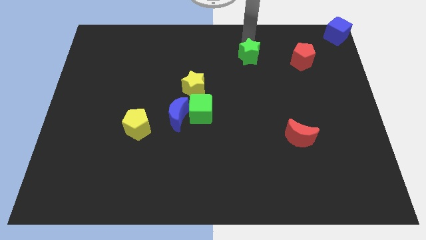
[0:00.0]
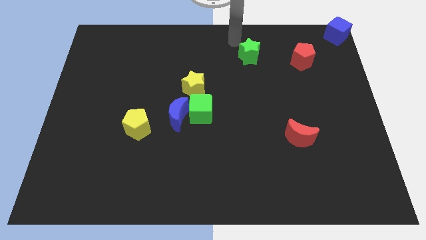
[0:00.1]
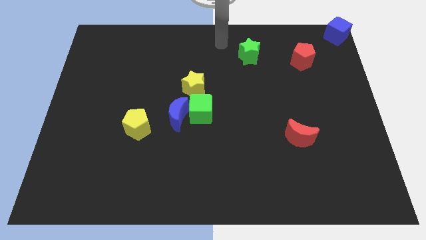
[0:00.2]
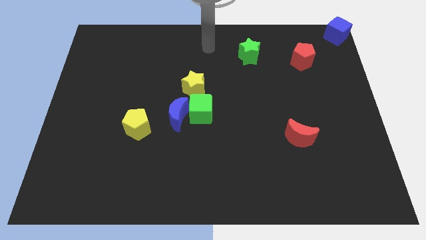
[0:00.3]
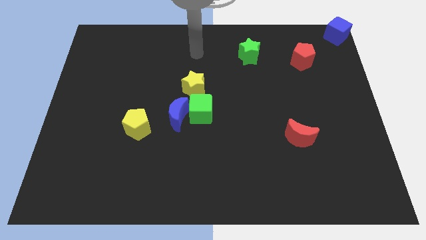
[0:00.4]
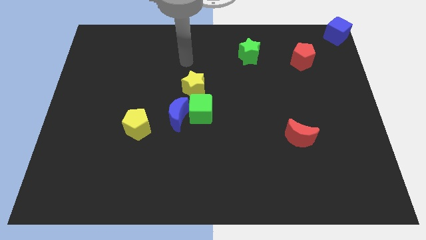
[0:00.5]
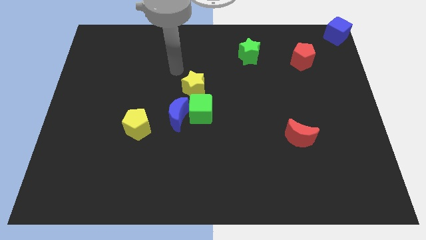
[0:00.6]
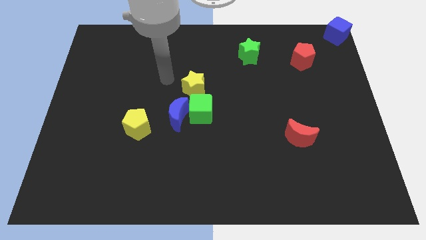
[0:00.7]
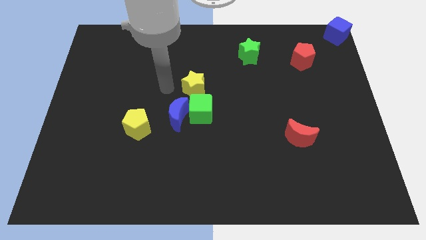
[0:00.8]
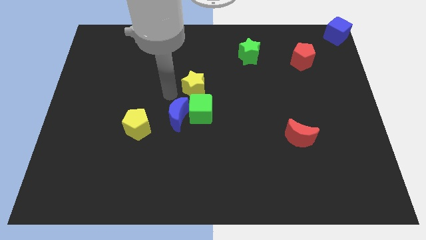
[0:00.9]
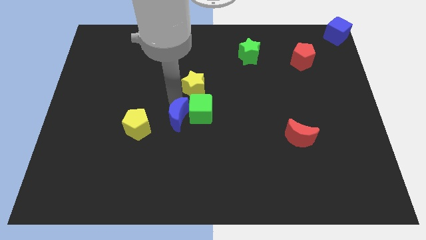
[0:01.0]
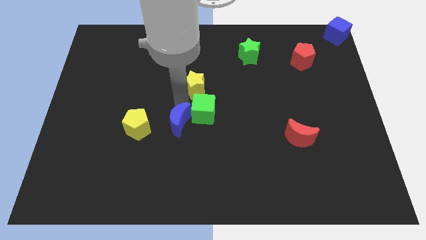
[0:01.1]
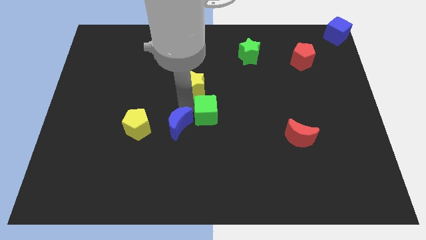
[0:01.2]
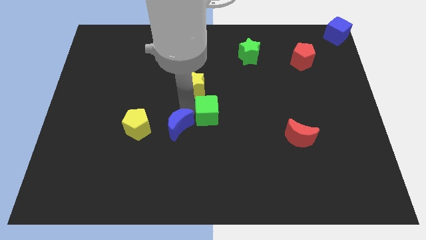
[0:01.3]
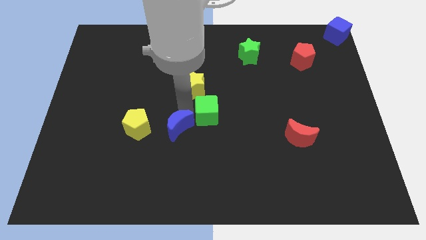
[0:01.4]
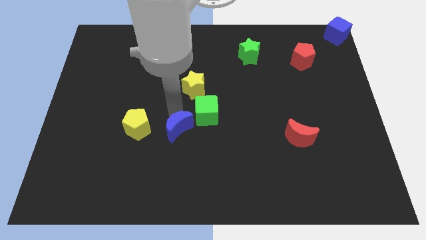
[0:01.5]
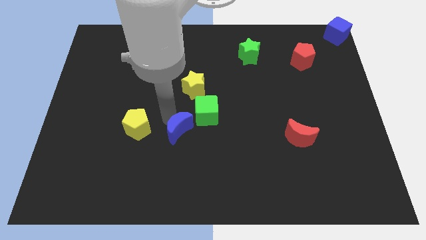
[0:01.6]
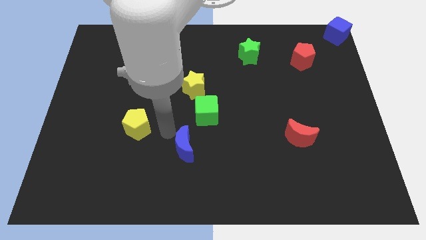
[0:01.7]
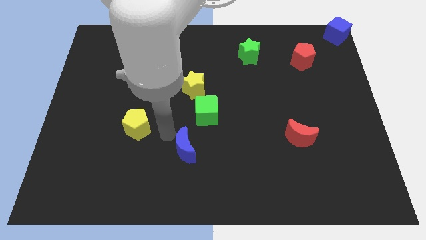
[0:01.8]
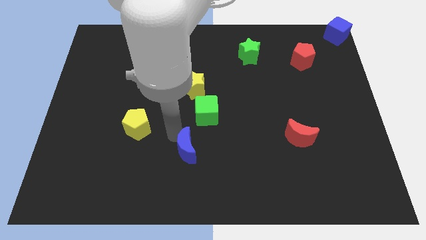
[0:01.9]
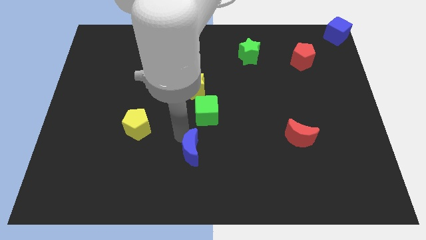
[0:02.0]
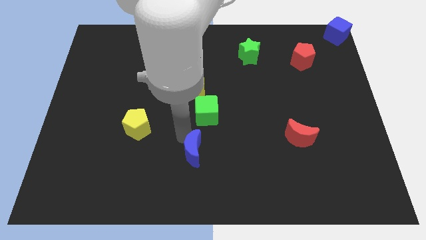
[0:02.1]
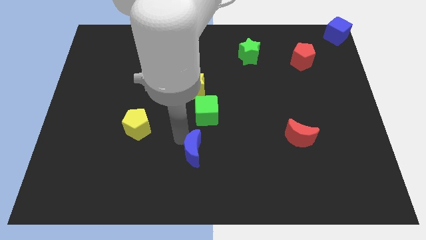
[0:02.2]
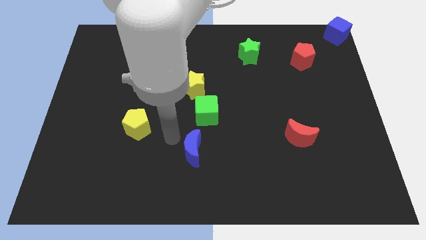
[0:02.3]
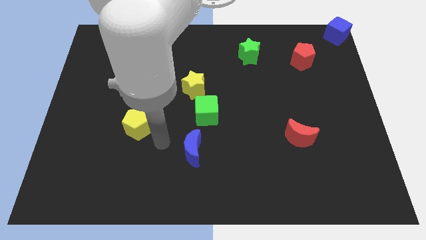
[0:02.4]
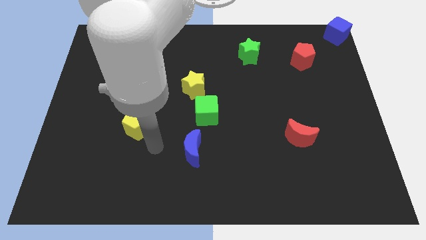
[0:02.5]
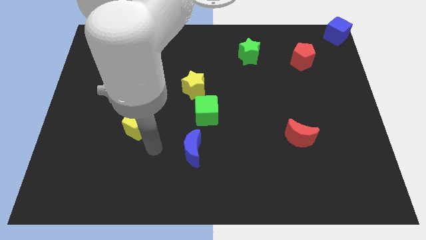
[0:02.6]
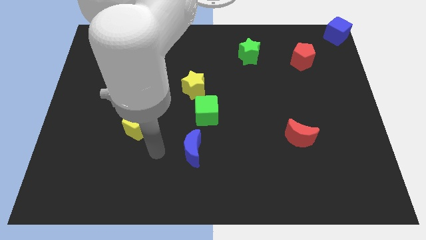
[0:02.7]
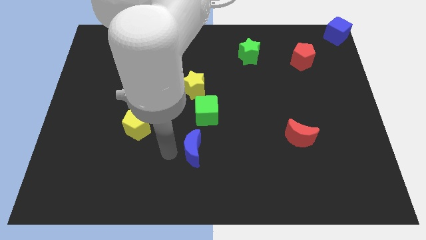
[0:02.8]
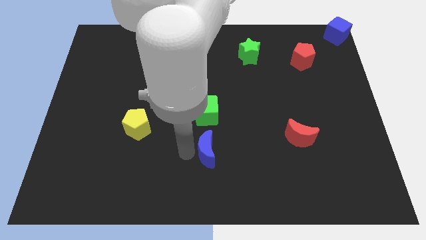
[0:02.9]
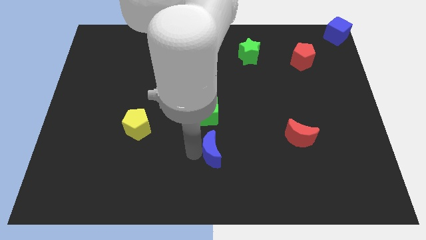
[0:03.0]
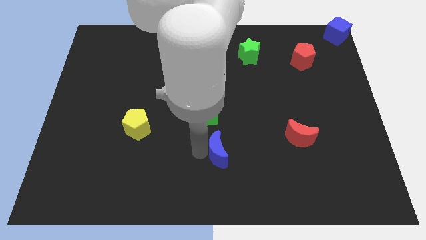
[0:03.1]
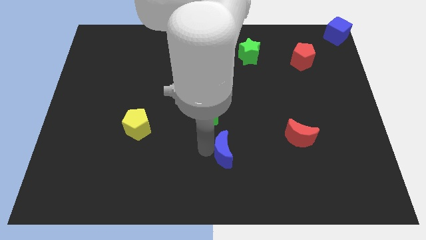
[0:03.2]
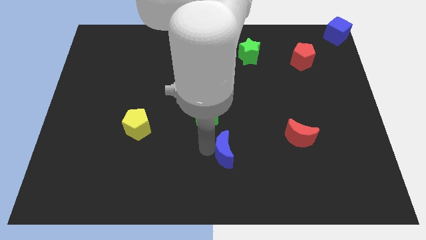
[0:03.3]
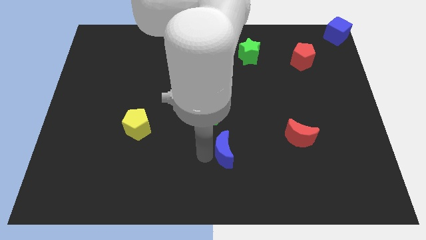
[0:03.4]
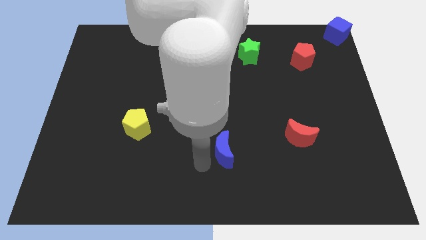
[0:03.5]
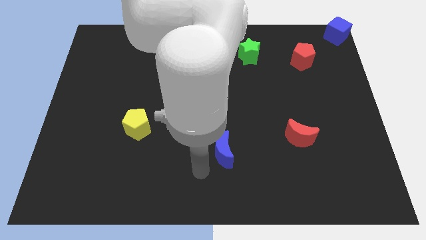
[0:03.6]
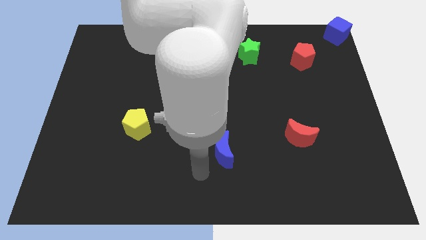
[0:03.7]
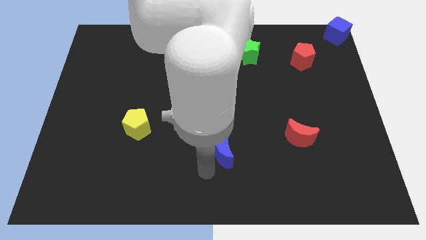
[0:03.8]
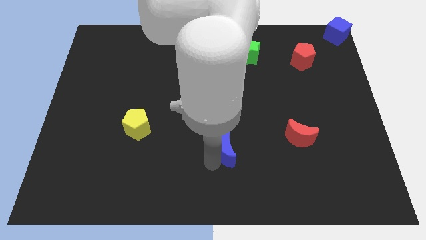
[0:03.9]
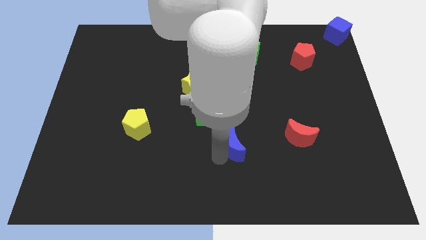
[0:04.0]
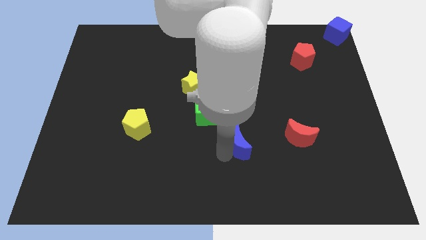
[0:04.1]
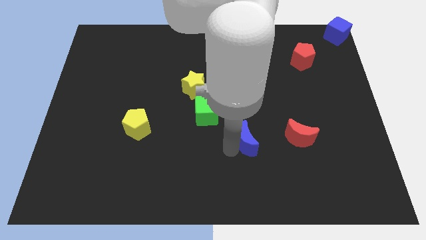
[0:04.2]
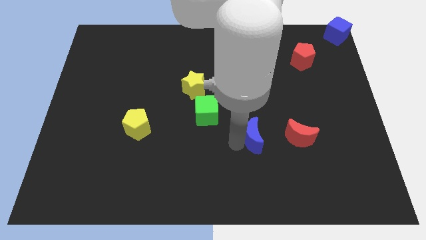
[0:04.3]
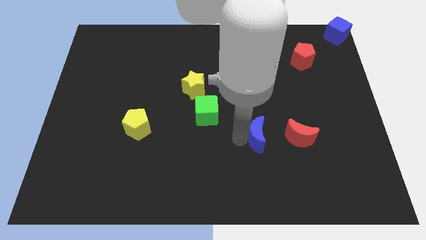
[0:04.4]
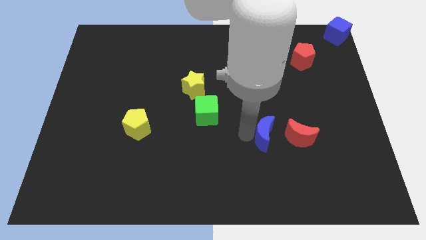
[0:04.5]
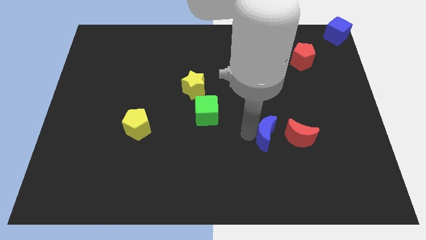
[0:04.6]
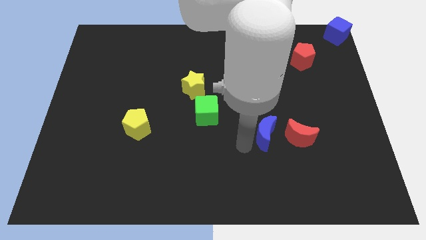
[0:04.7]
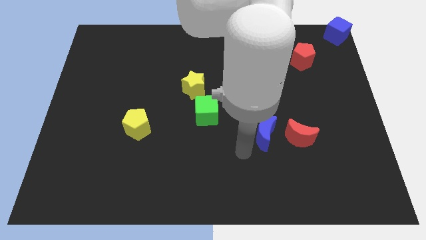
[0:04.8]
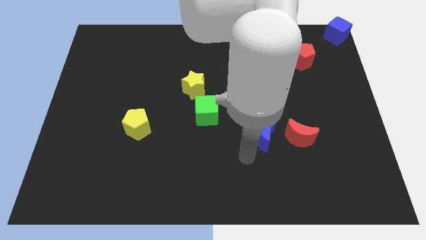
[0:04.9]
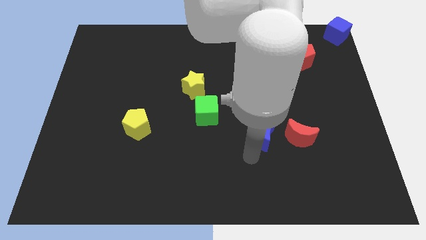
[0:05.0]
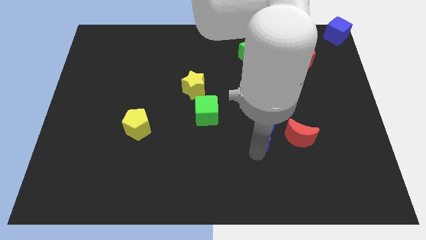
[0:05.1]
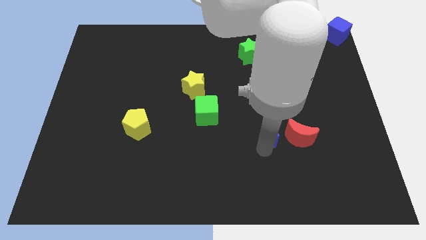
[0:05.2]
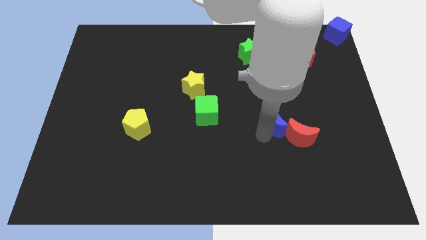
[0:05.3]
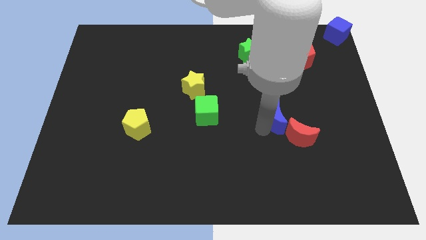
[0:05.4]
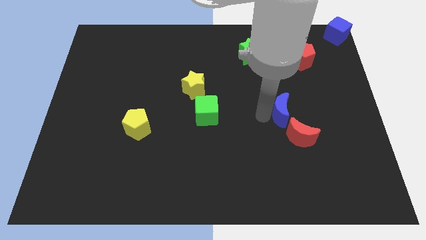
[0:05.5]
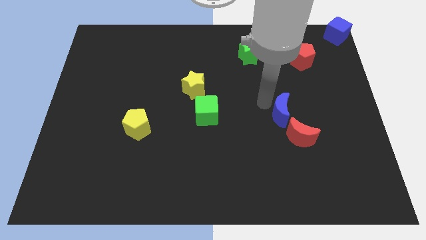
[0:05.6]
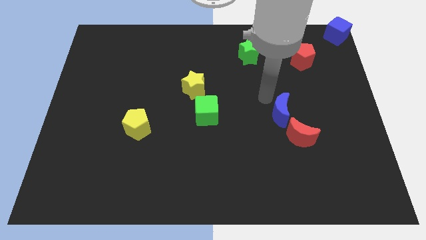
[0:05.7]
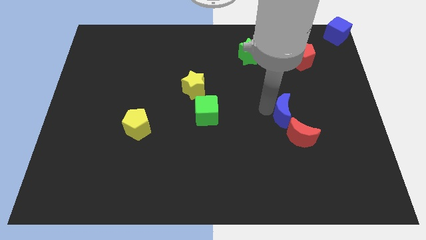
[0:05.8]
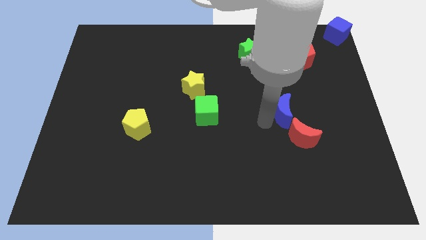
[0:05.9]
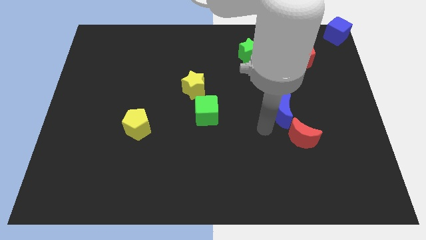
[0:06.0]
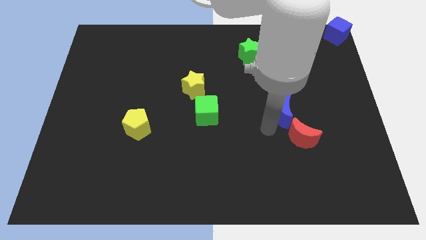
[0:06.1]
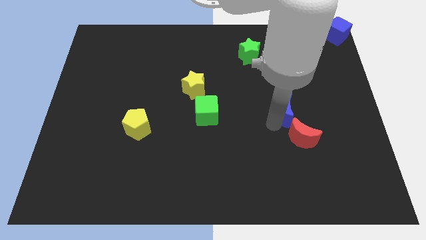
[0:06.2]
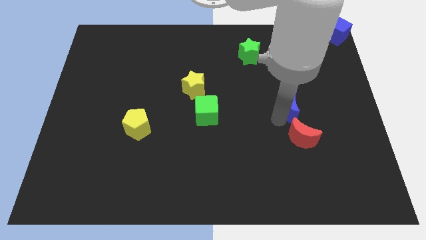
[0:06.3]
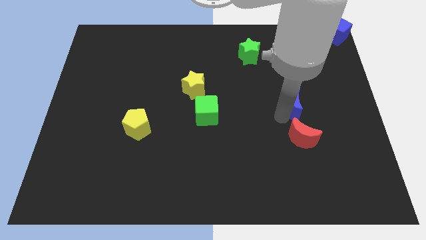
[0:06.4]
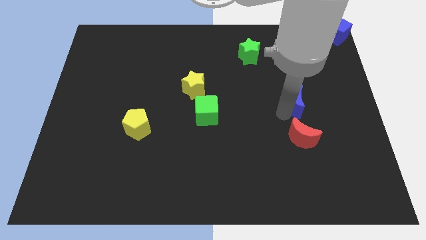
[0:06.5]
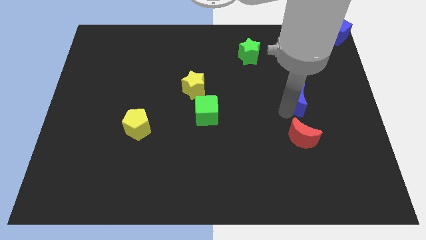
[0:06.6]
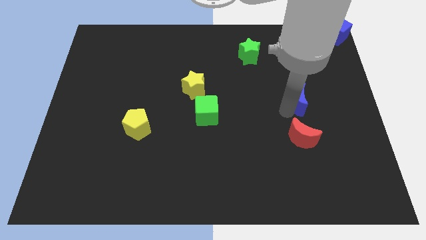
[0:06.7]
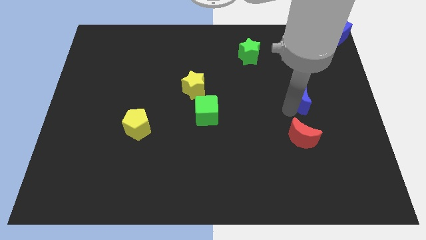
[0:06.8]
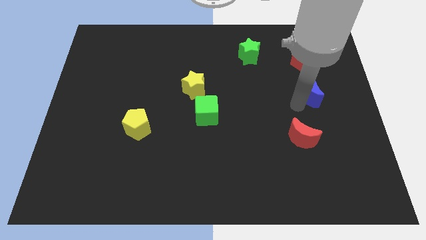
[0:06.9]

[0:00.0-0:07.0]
push the blue crescent below the red pentagon

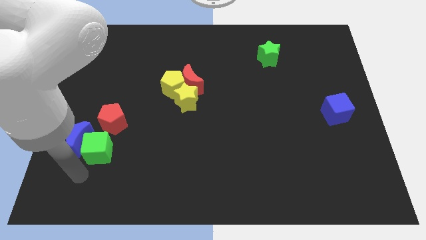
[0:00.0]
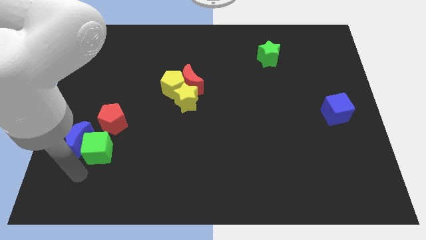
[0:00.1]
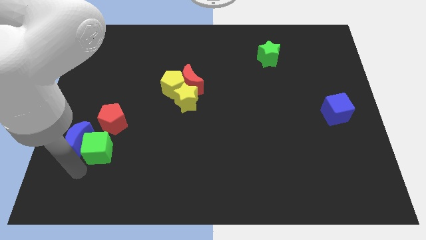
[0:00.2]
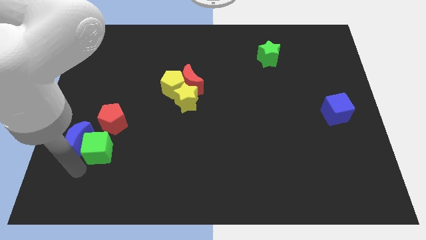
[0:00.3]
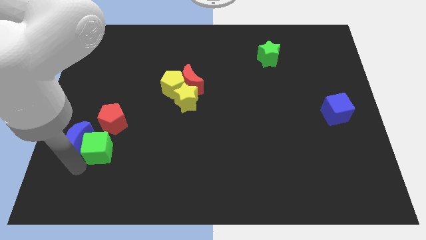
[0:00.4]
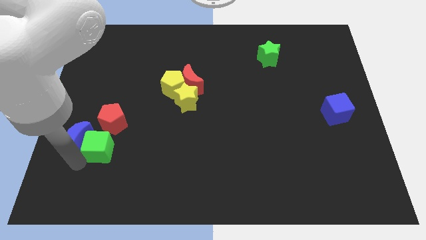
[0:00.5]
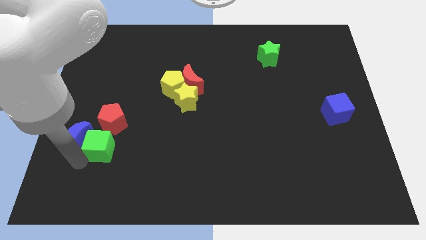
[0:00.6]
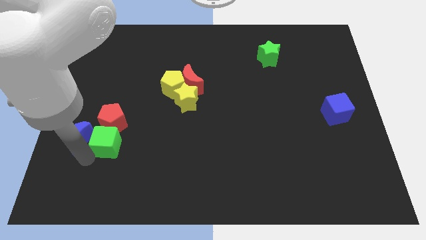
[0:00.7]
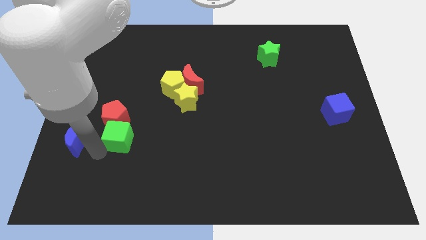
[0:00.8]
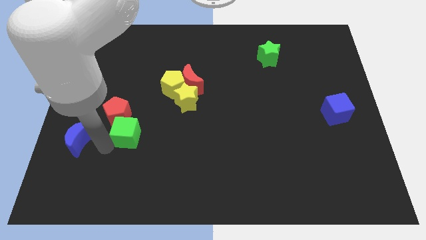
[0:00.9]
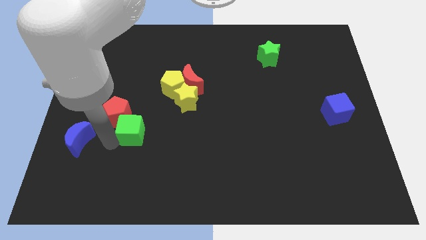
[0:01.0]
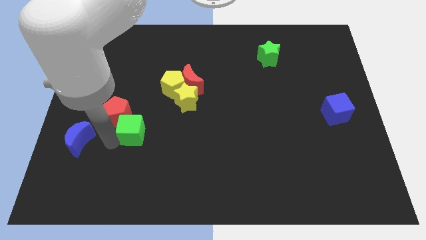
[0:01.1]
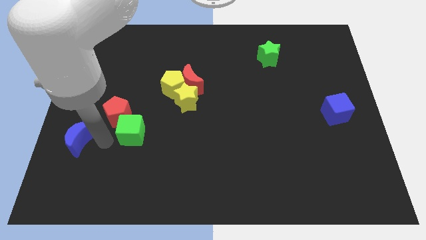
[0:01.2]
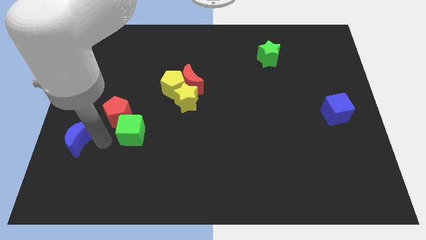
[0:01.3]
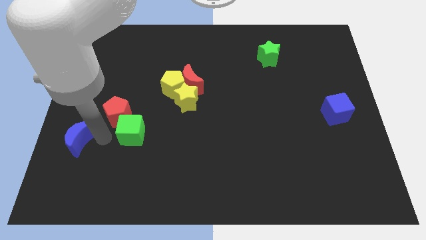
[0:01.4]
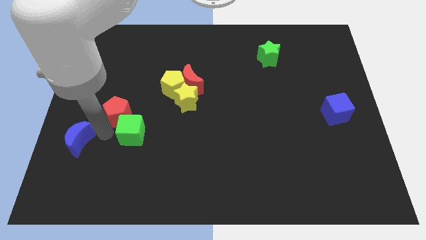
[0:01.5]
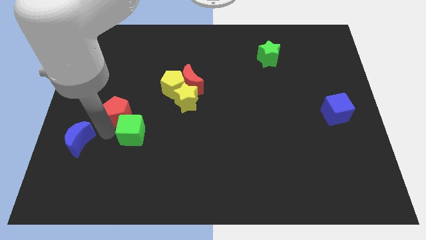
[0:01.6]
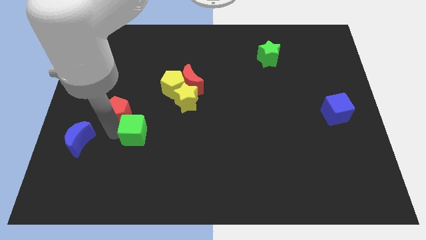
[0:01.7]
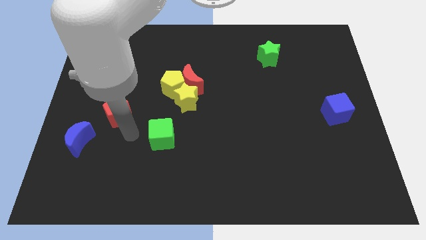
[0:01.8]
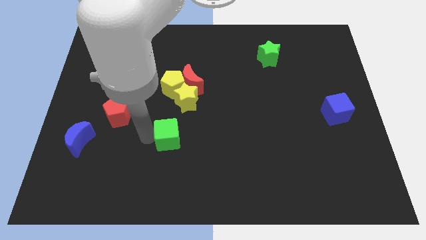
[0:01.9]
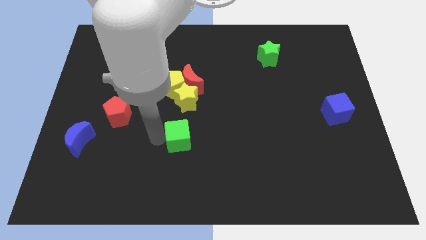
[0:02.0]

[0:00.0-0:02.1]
move the green cube to the right side
